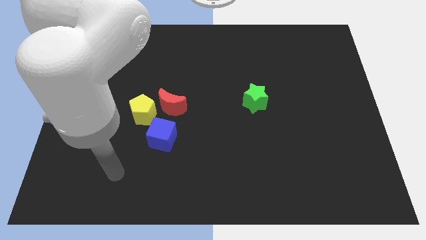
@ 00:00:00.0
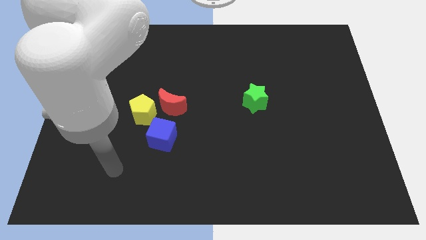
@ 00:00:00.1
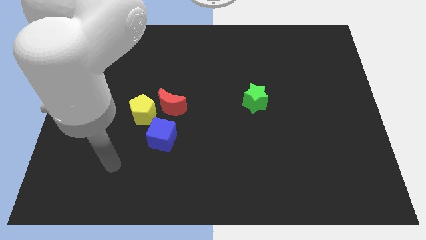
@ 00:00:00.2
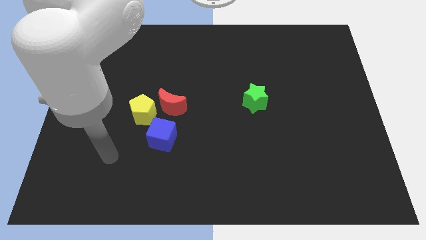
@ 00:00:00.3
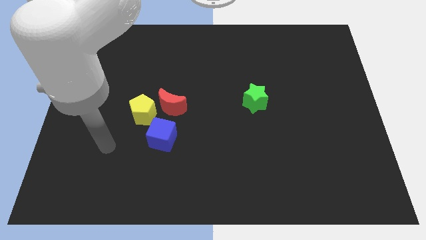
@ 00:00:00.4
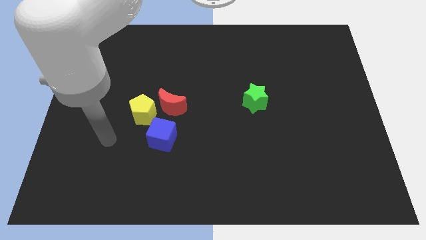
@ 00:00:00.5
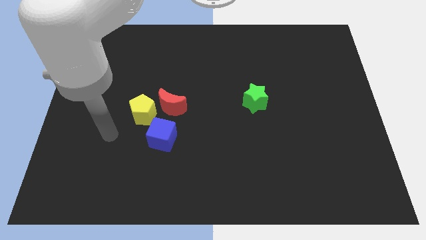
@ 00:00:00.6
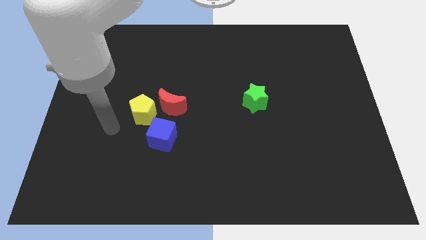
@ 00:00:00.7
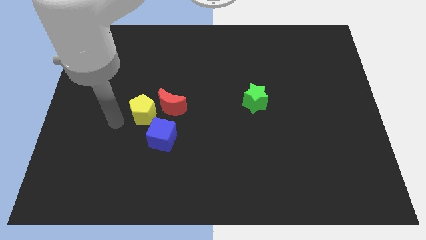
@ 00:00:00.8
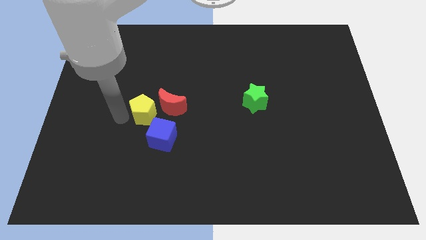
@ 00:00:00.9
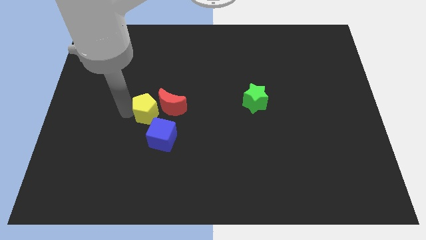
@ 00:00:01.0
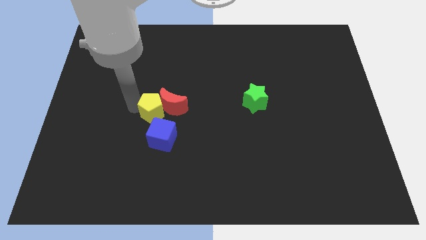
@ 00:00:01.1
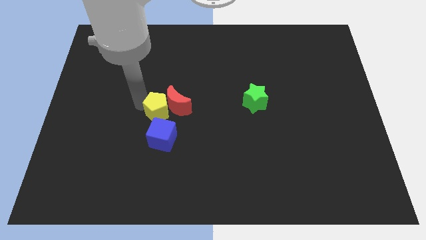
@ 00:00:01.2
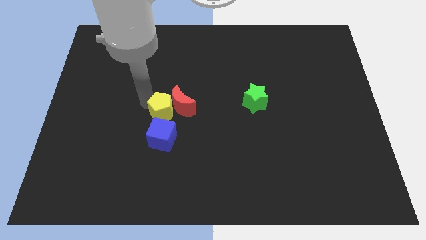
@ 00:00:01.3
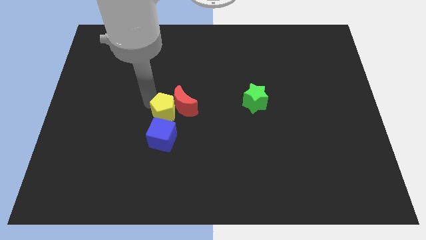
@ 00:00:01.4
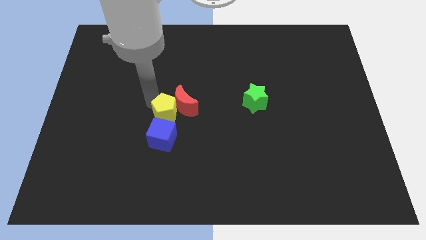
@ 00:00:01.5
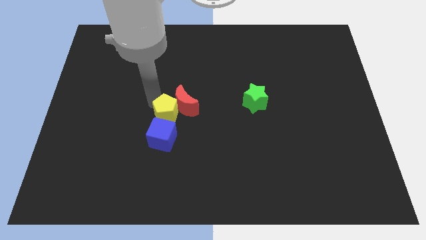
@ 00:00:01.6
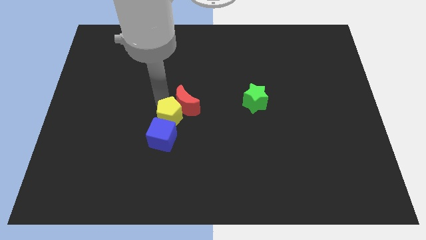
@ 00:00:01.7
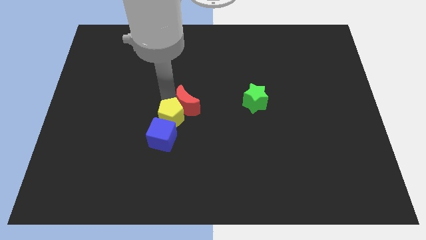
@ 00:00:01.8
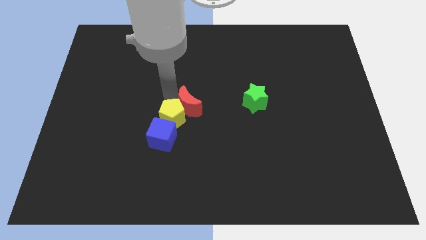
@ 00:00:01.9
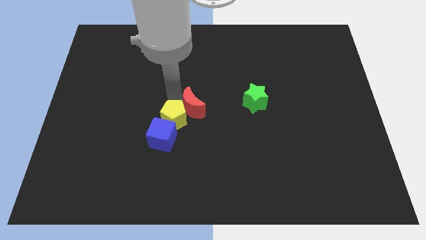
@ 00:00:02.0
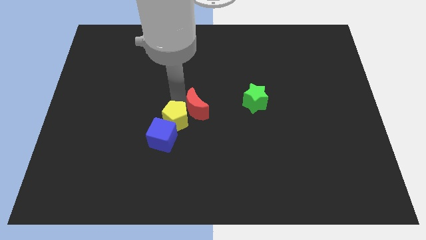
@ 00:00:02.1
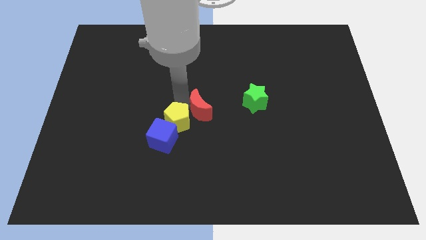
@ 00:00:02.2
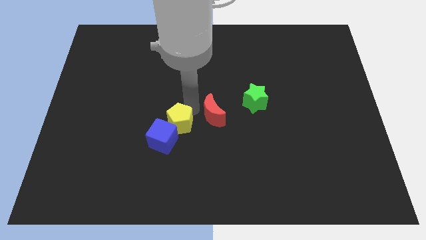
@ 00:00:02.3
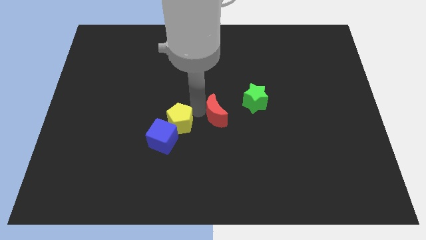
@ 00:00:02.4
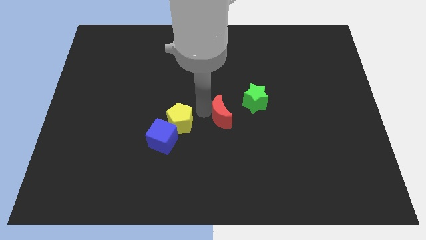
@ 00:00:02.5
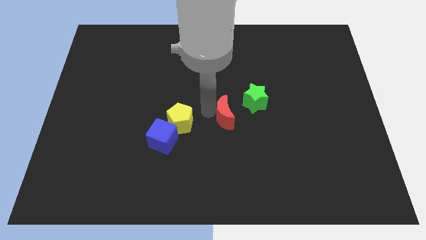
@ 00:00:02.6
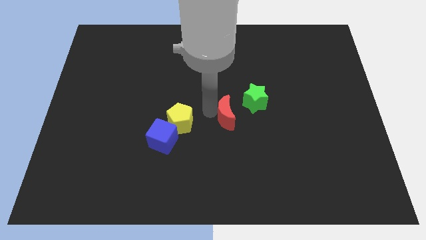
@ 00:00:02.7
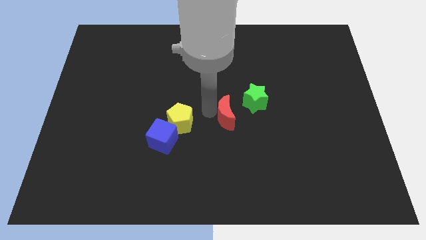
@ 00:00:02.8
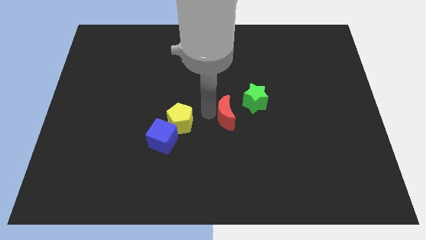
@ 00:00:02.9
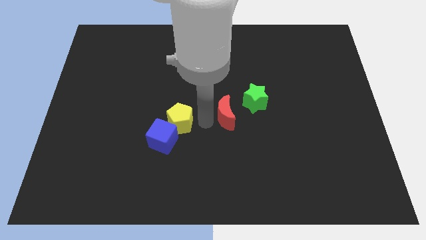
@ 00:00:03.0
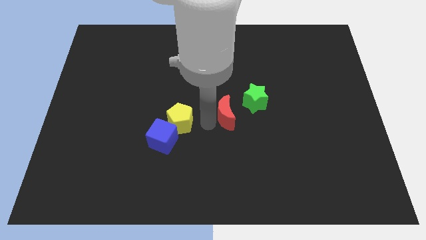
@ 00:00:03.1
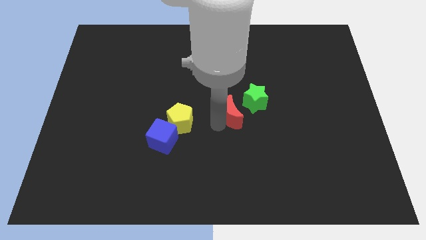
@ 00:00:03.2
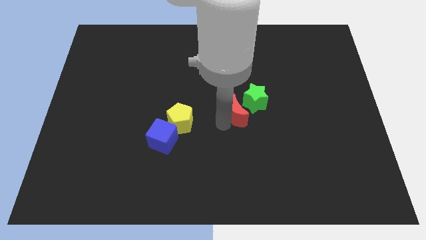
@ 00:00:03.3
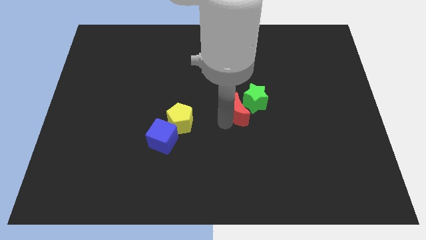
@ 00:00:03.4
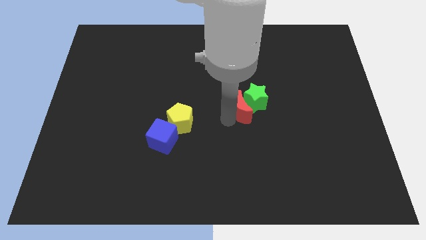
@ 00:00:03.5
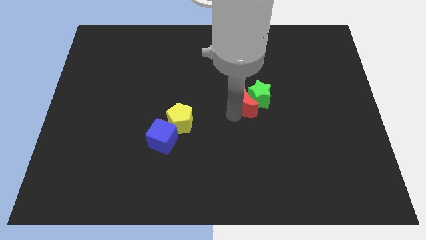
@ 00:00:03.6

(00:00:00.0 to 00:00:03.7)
move the red block next to the green block

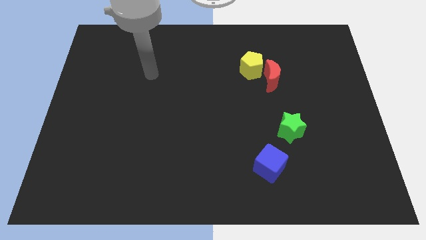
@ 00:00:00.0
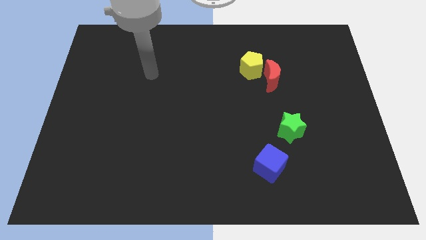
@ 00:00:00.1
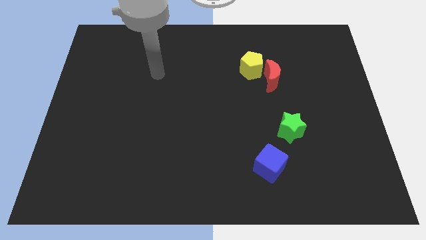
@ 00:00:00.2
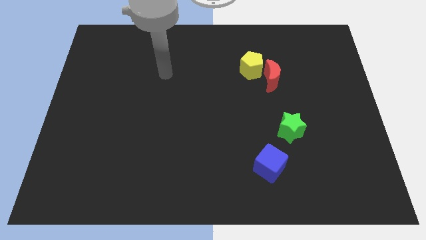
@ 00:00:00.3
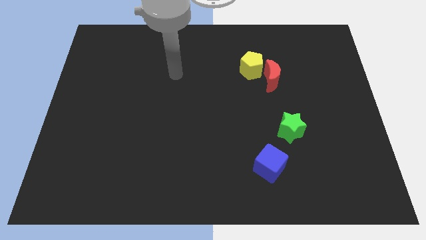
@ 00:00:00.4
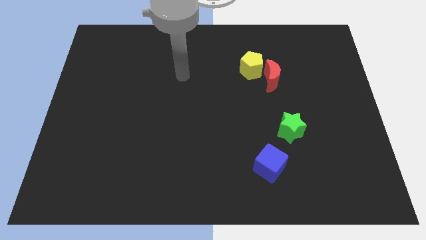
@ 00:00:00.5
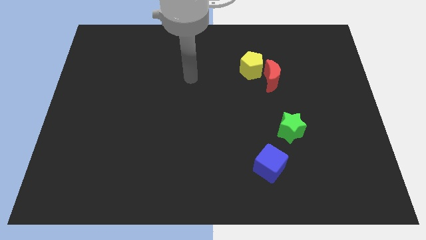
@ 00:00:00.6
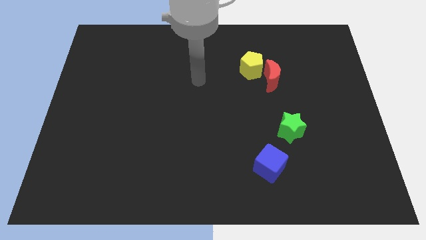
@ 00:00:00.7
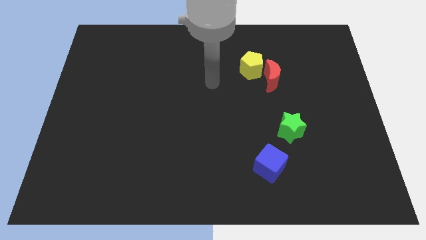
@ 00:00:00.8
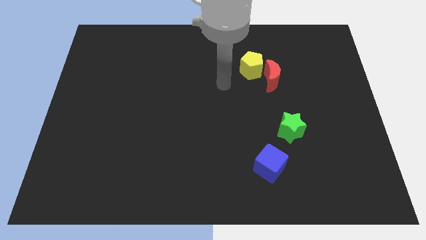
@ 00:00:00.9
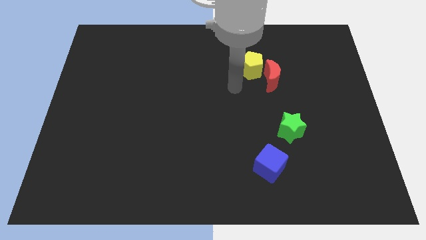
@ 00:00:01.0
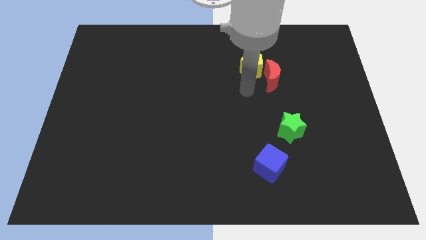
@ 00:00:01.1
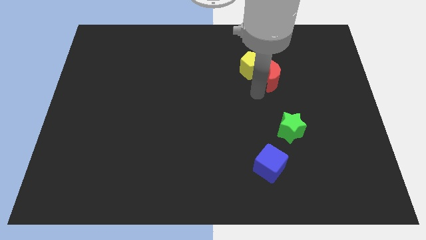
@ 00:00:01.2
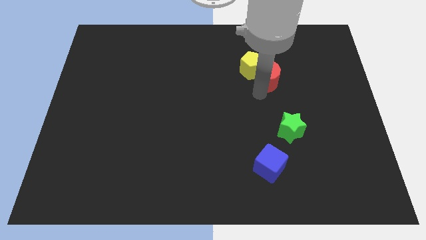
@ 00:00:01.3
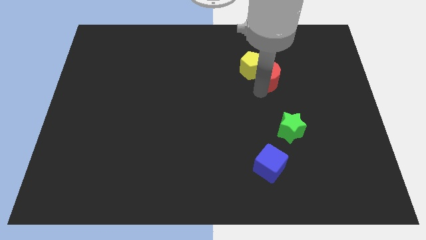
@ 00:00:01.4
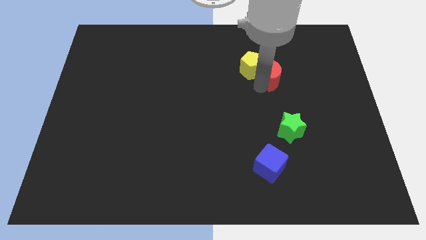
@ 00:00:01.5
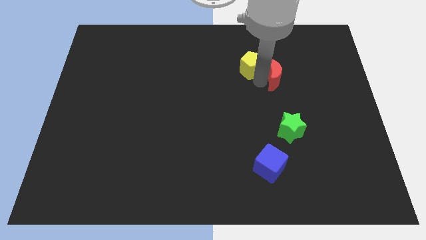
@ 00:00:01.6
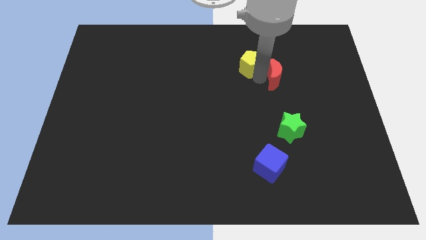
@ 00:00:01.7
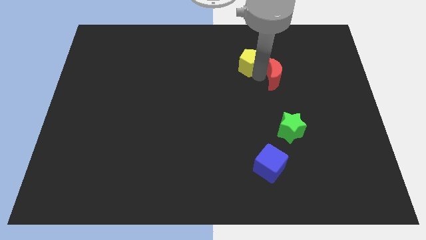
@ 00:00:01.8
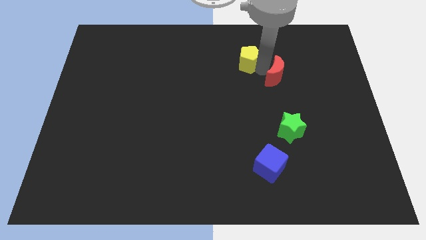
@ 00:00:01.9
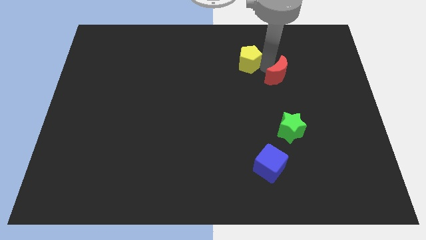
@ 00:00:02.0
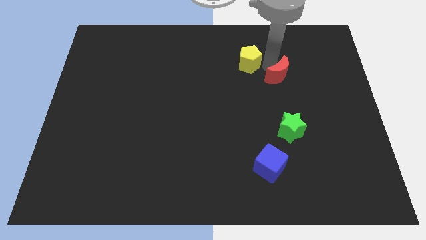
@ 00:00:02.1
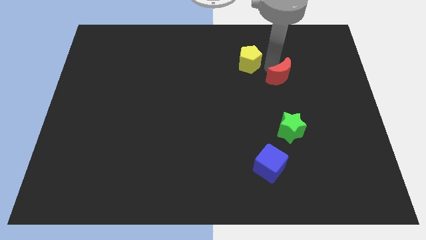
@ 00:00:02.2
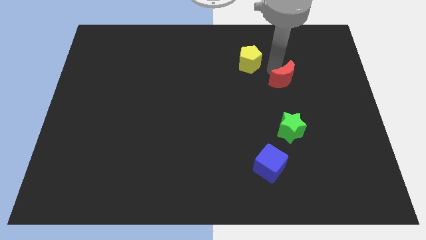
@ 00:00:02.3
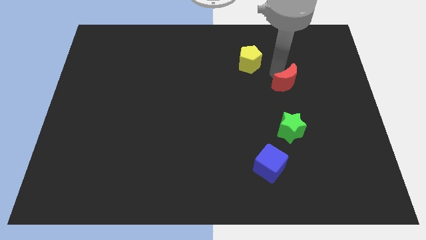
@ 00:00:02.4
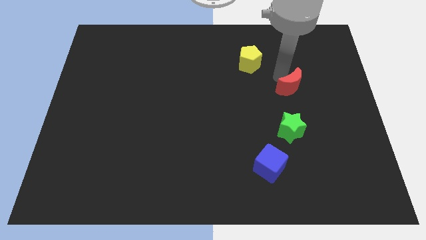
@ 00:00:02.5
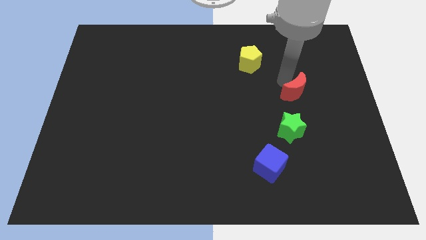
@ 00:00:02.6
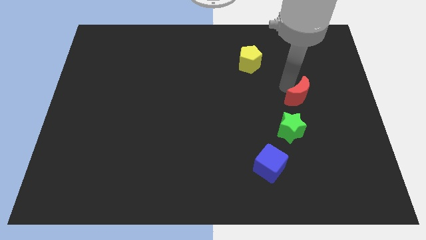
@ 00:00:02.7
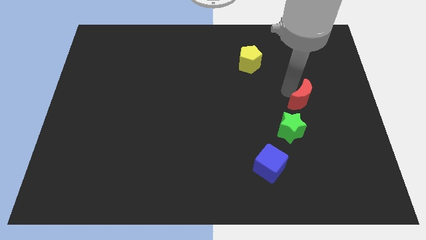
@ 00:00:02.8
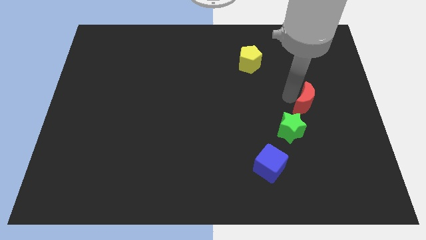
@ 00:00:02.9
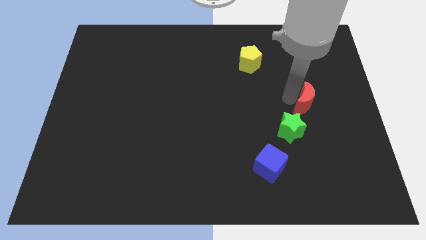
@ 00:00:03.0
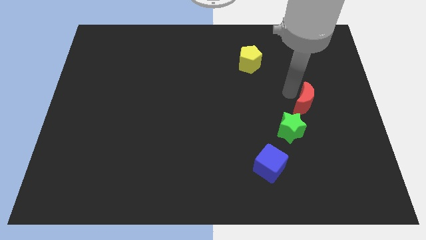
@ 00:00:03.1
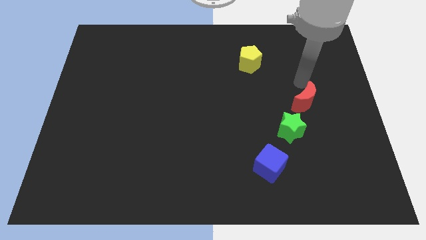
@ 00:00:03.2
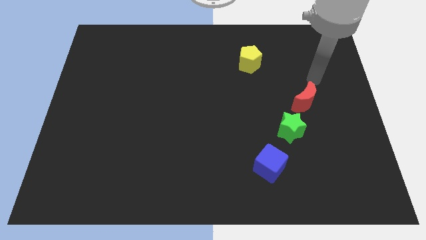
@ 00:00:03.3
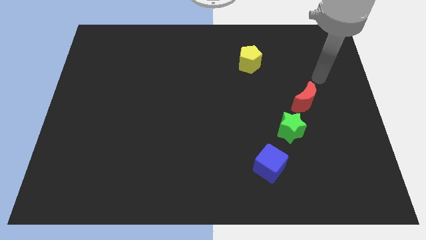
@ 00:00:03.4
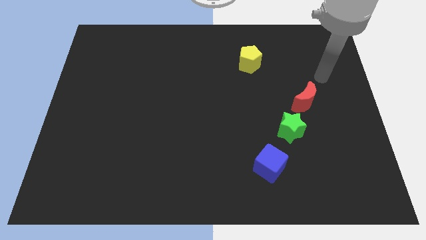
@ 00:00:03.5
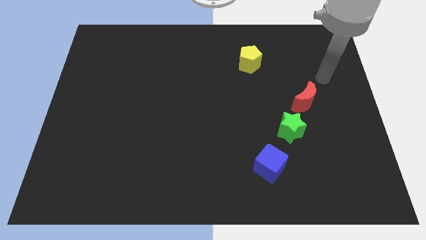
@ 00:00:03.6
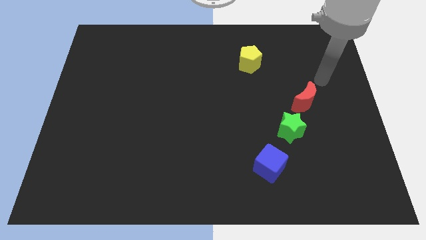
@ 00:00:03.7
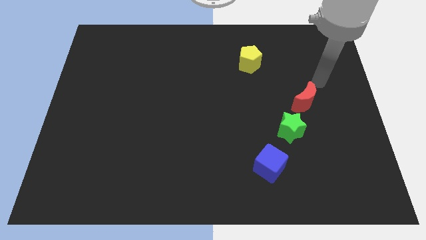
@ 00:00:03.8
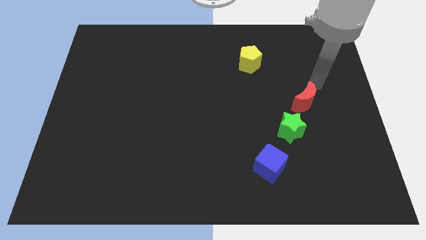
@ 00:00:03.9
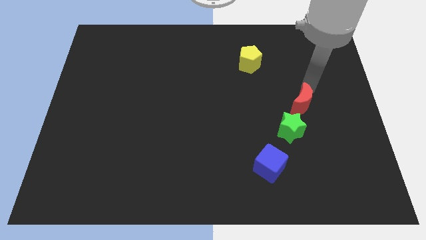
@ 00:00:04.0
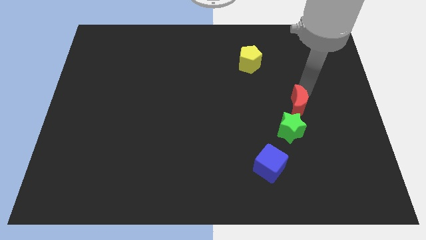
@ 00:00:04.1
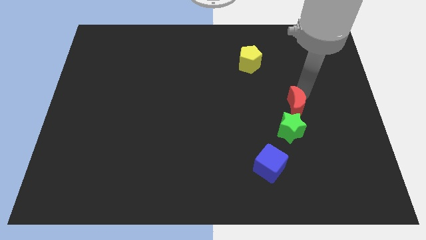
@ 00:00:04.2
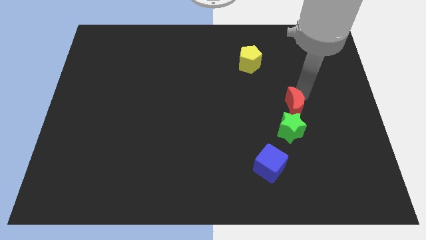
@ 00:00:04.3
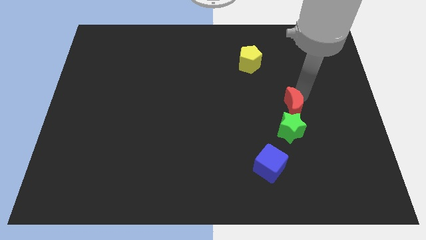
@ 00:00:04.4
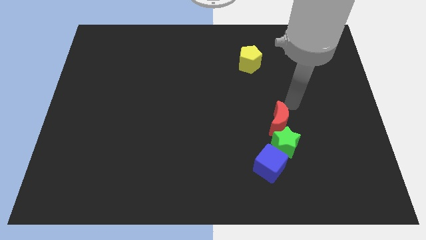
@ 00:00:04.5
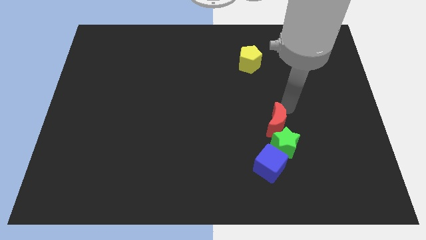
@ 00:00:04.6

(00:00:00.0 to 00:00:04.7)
slide the moon close to the green star
